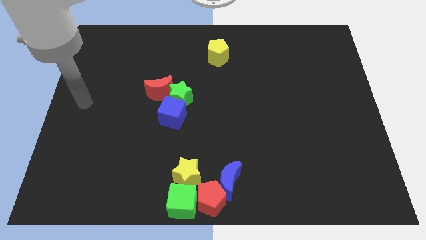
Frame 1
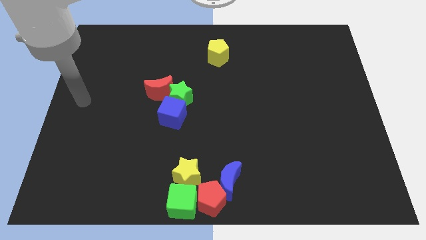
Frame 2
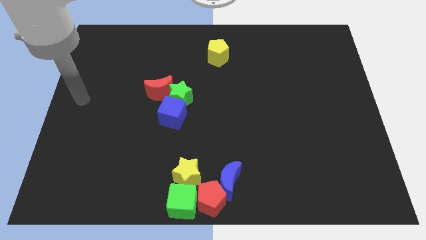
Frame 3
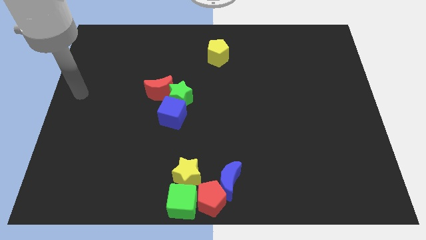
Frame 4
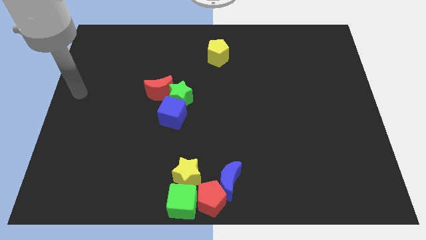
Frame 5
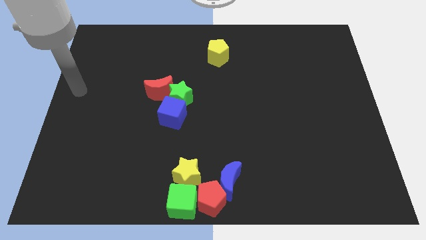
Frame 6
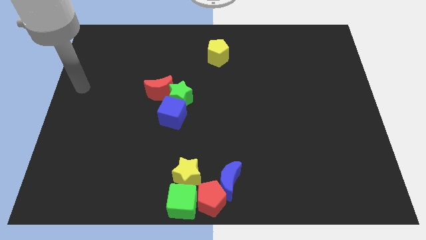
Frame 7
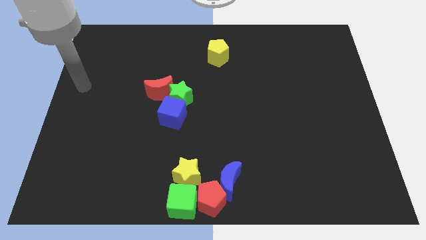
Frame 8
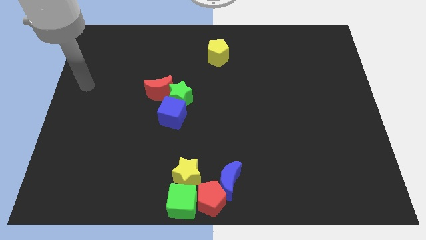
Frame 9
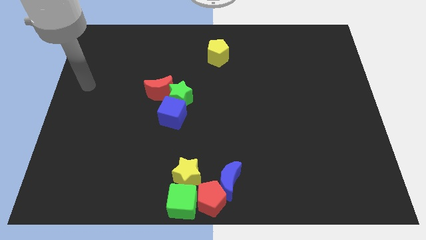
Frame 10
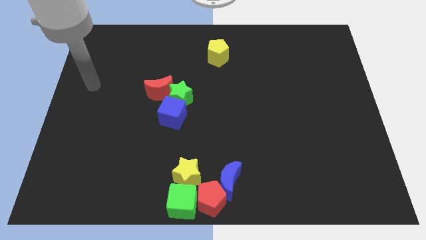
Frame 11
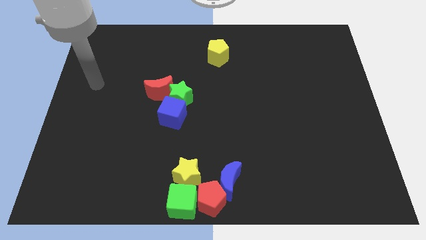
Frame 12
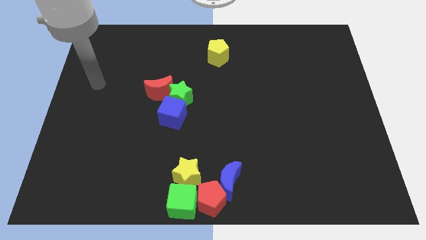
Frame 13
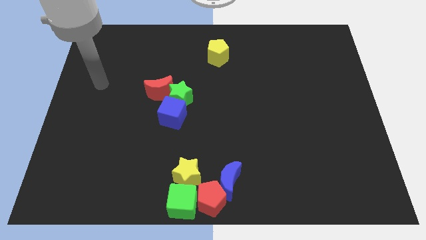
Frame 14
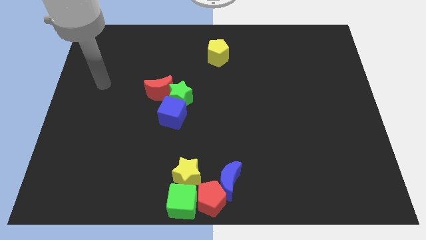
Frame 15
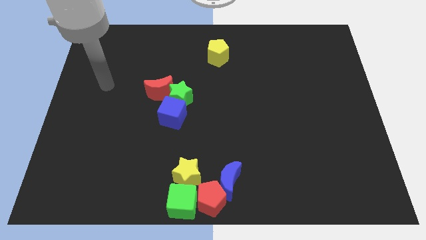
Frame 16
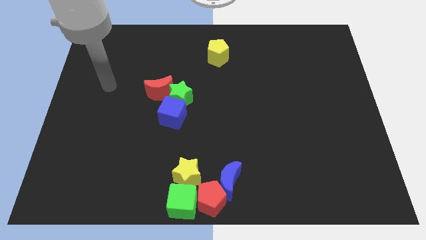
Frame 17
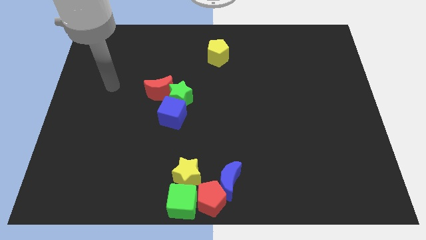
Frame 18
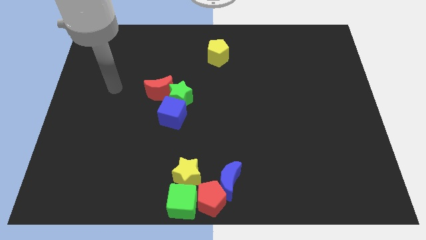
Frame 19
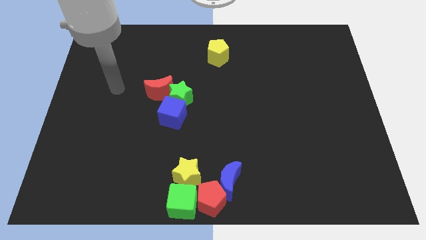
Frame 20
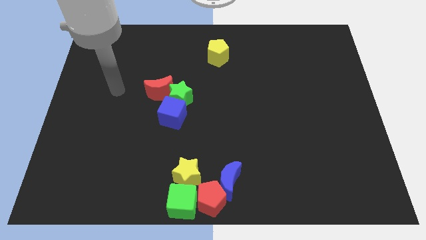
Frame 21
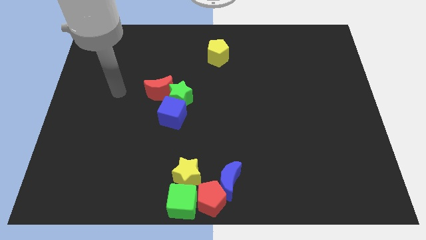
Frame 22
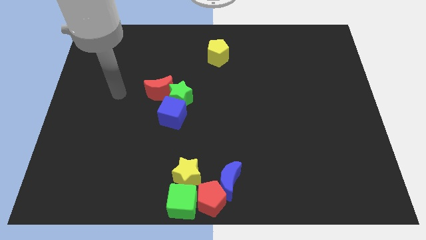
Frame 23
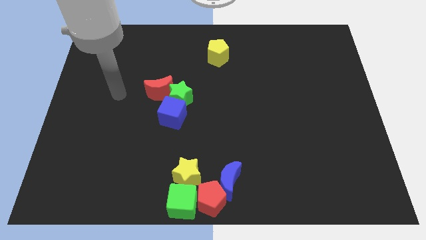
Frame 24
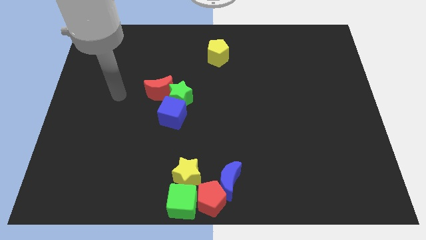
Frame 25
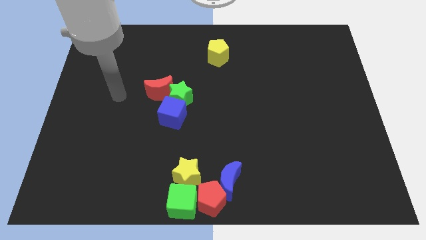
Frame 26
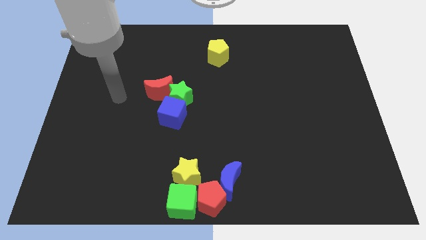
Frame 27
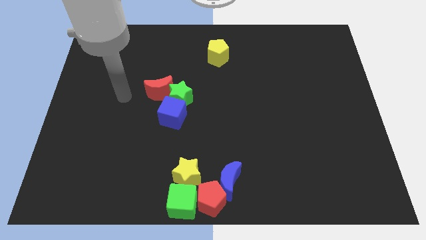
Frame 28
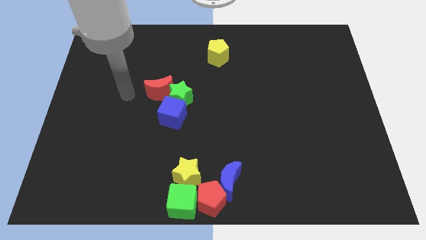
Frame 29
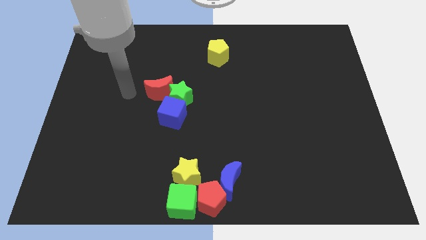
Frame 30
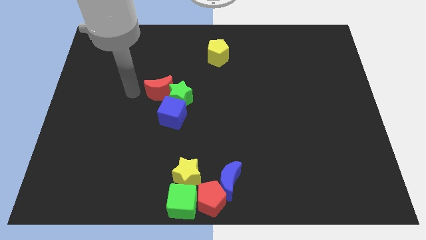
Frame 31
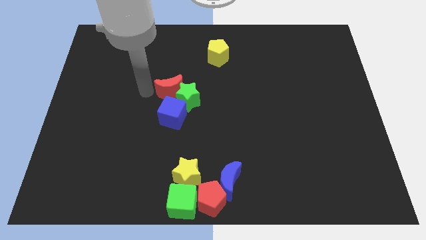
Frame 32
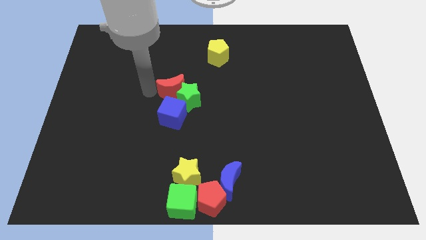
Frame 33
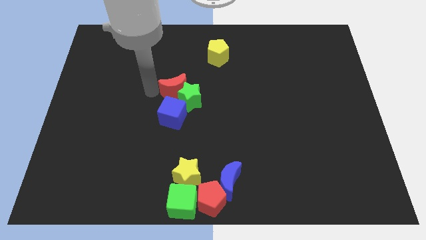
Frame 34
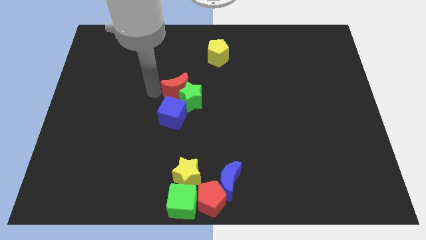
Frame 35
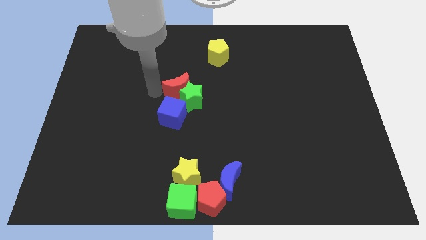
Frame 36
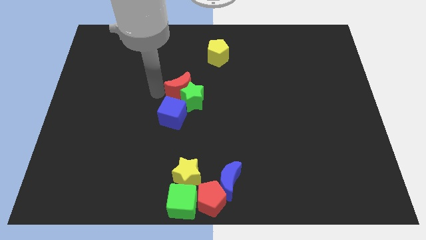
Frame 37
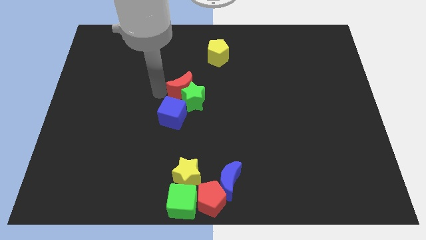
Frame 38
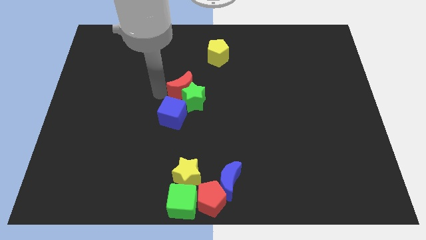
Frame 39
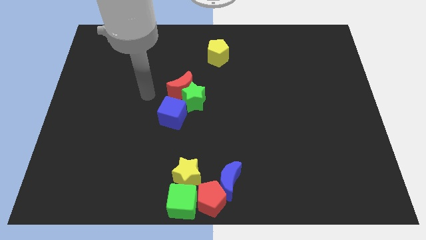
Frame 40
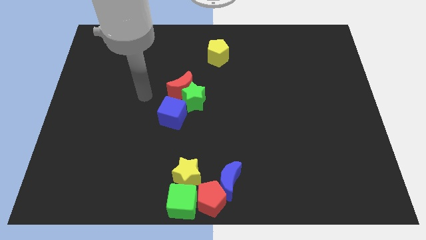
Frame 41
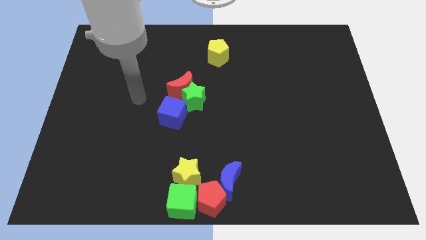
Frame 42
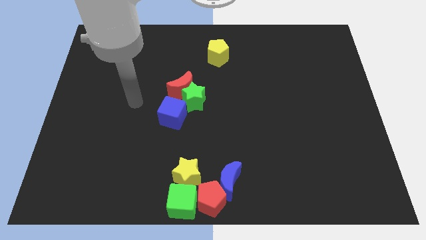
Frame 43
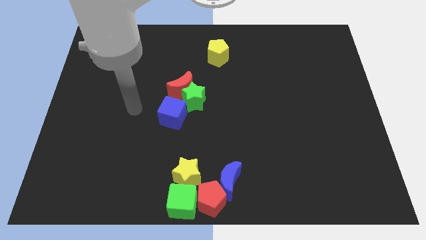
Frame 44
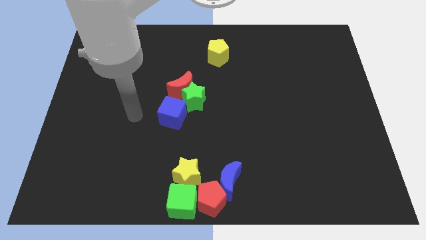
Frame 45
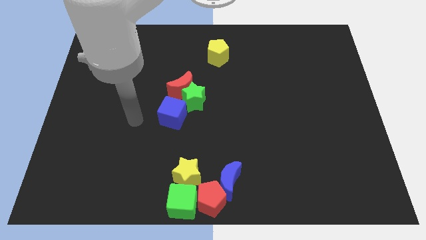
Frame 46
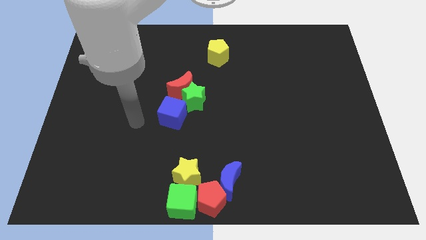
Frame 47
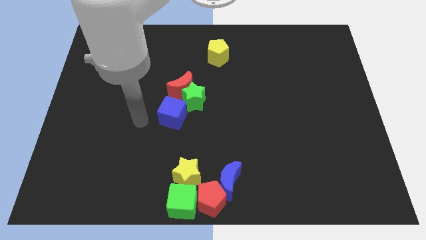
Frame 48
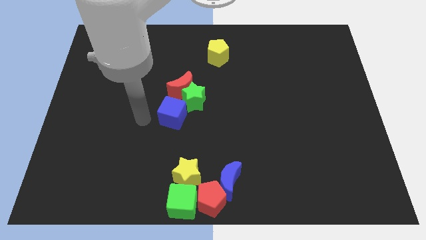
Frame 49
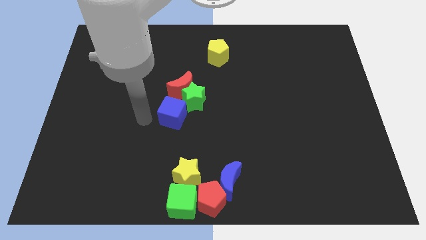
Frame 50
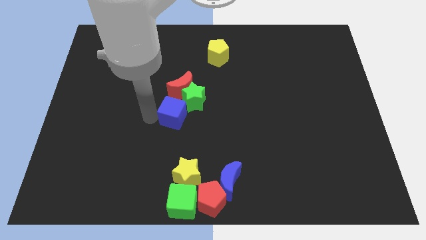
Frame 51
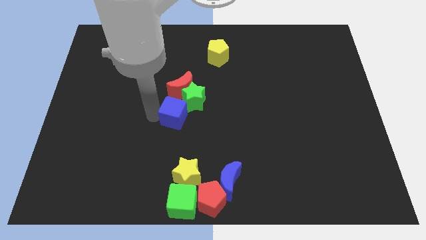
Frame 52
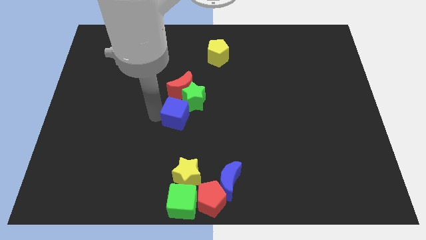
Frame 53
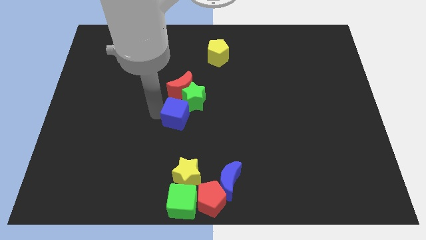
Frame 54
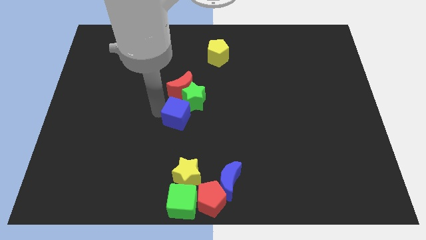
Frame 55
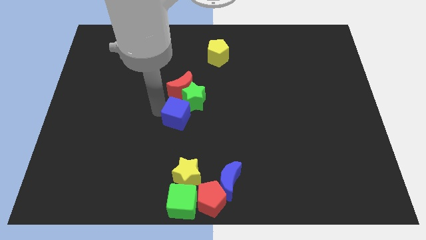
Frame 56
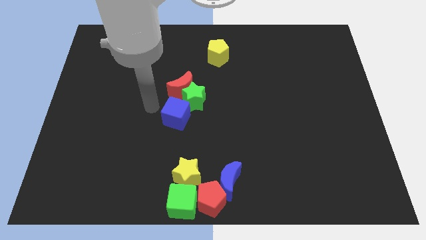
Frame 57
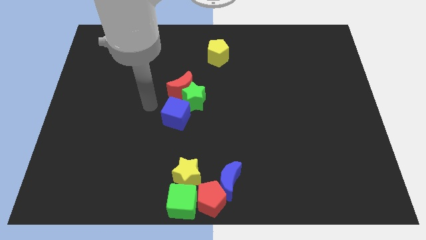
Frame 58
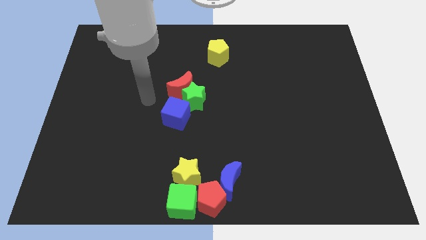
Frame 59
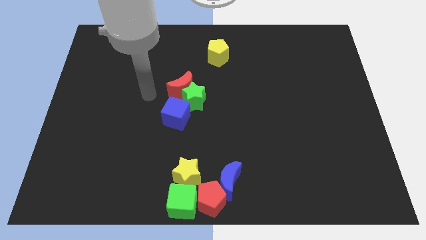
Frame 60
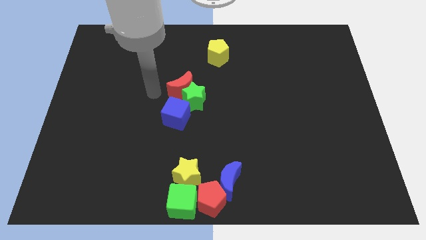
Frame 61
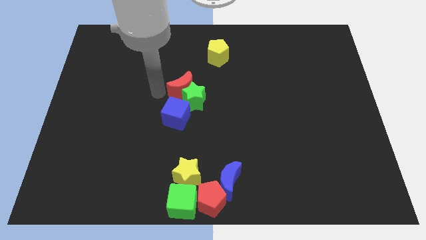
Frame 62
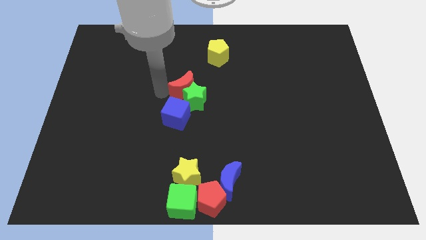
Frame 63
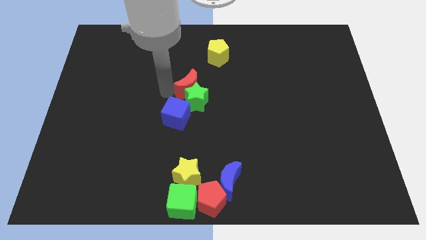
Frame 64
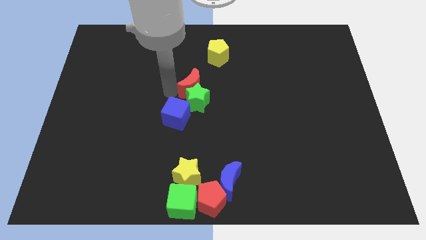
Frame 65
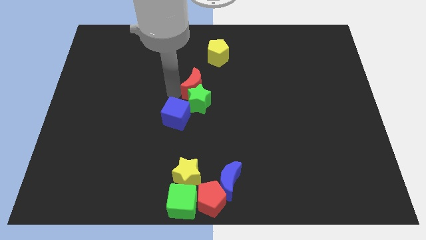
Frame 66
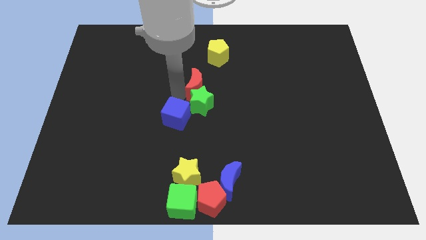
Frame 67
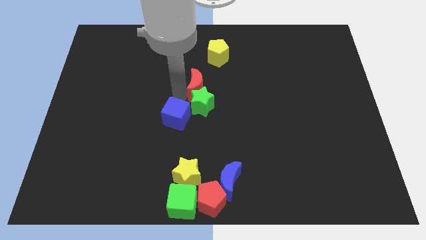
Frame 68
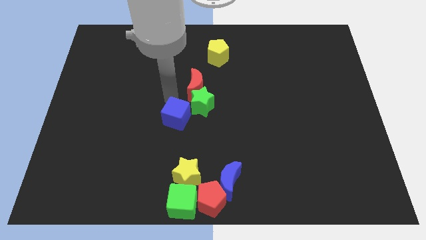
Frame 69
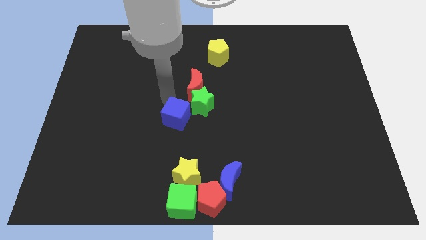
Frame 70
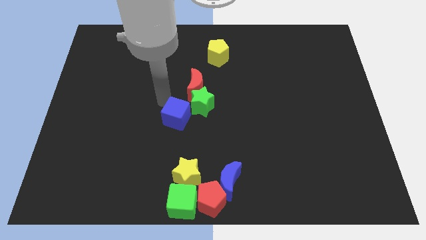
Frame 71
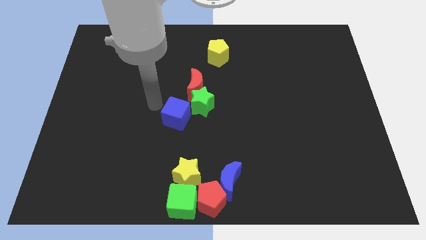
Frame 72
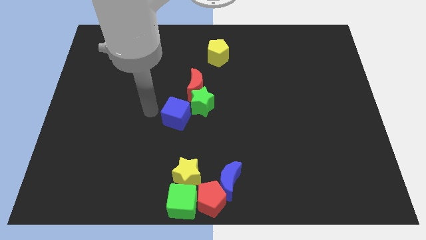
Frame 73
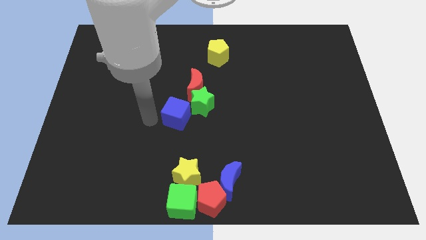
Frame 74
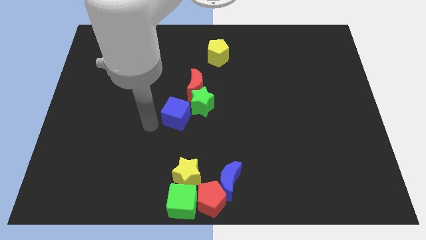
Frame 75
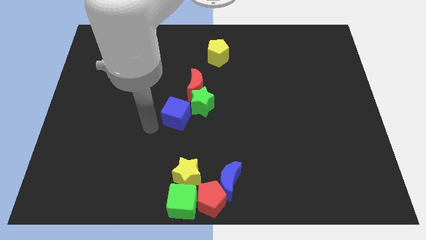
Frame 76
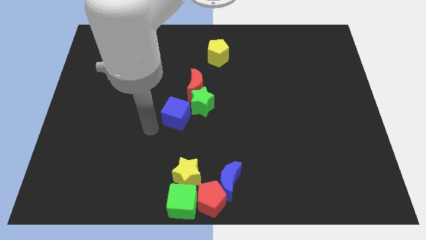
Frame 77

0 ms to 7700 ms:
place the red crescent above the blue cube

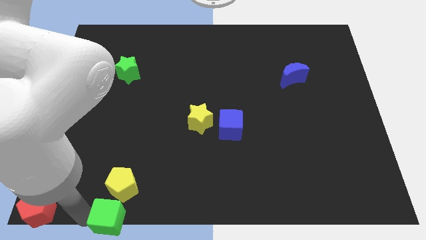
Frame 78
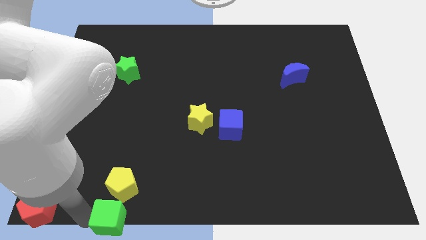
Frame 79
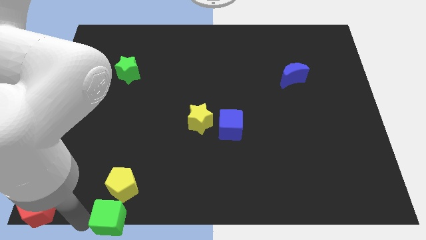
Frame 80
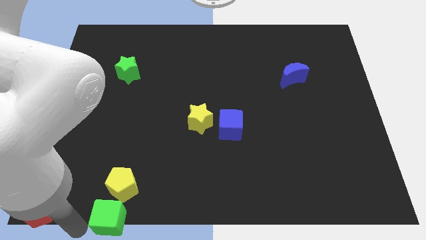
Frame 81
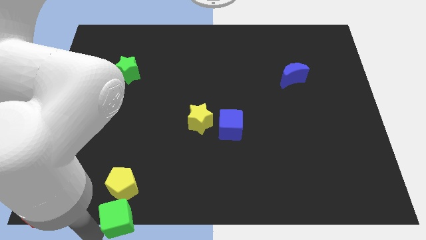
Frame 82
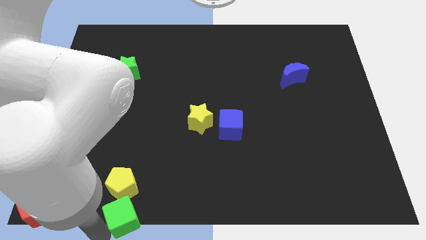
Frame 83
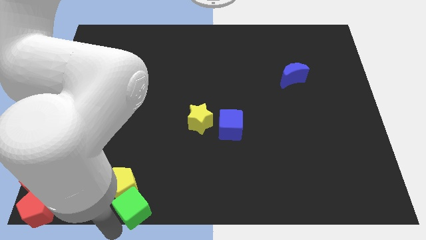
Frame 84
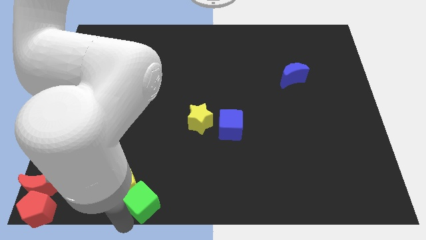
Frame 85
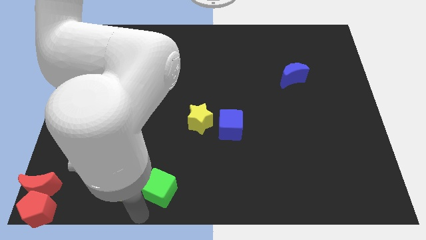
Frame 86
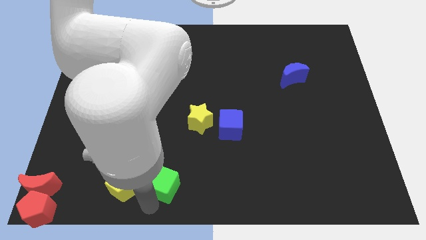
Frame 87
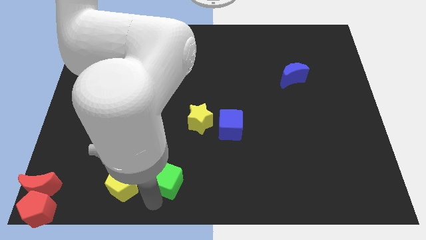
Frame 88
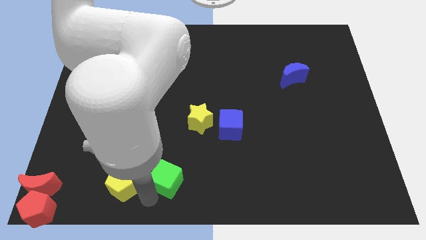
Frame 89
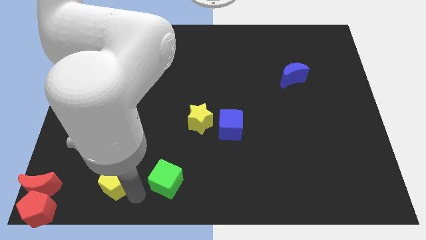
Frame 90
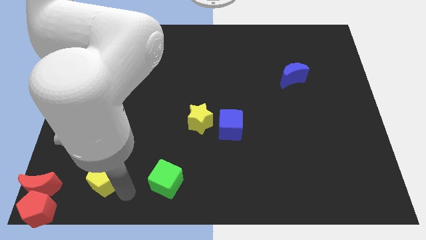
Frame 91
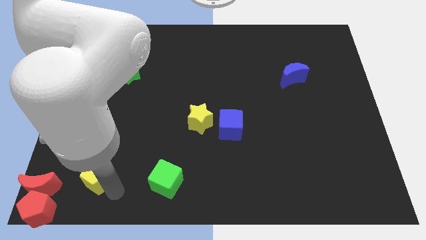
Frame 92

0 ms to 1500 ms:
separate the green cube and yellow pentagon
